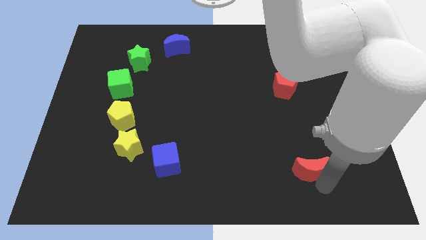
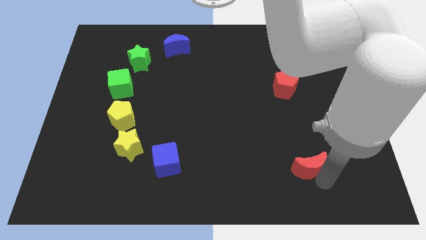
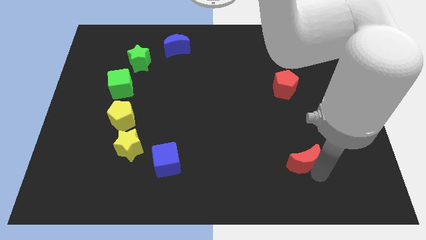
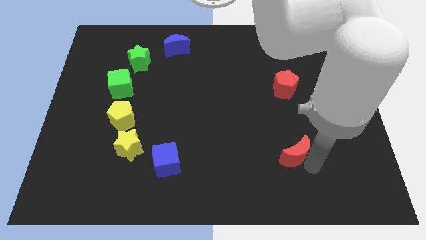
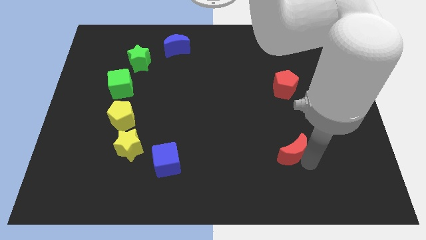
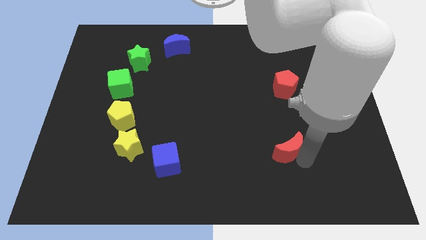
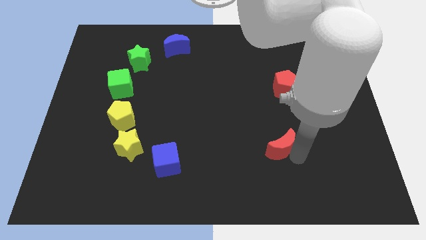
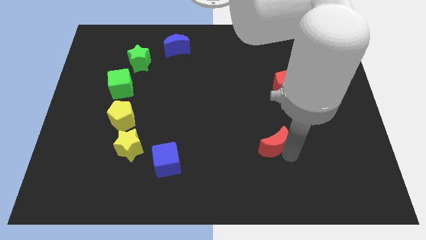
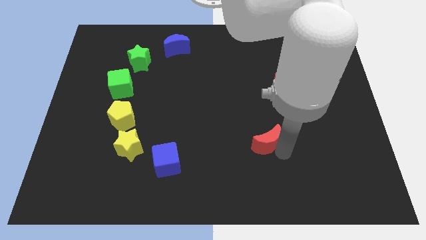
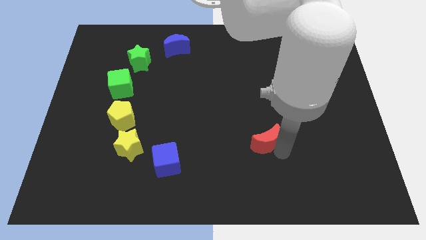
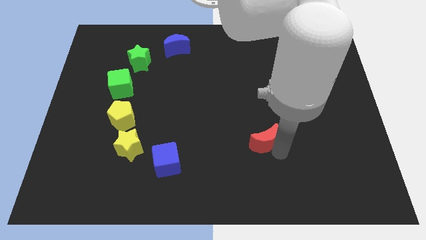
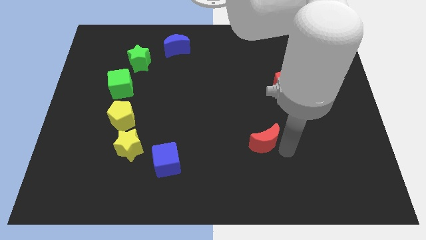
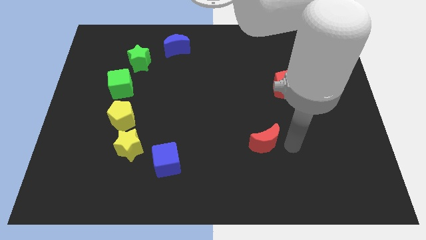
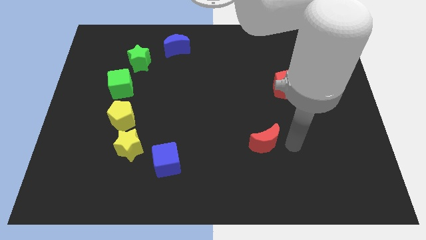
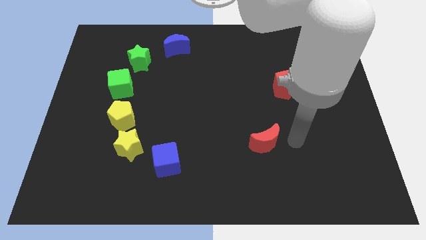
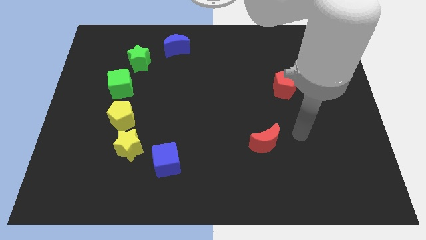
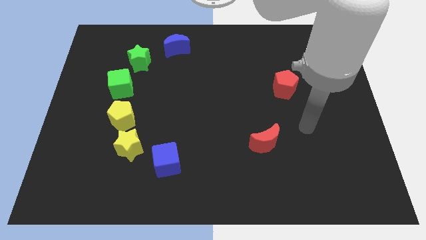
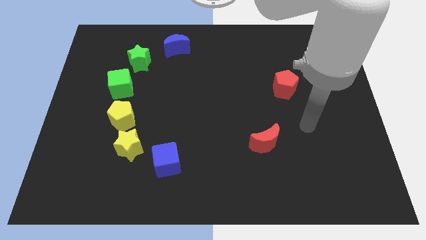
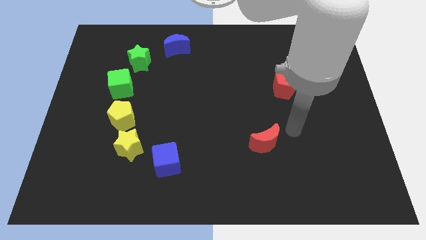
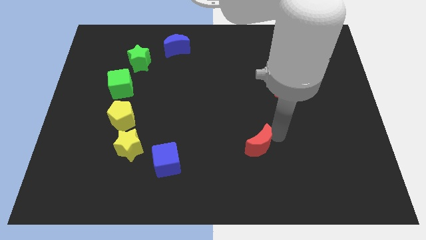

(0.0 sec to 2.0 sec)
move the red crescent towards the center of the board

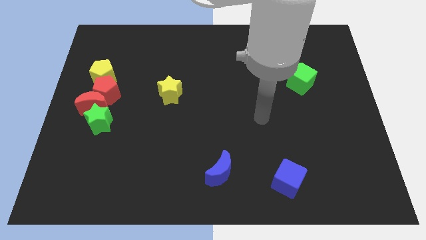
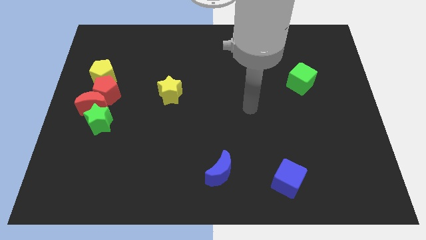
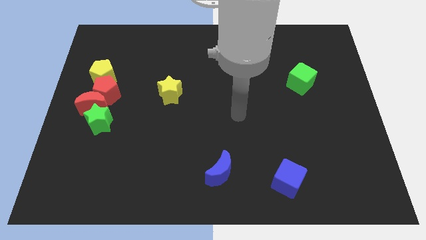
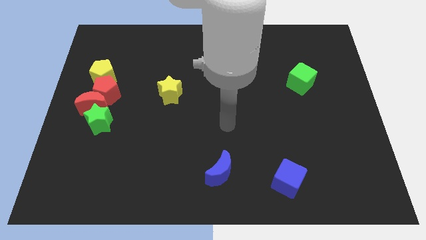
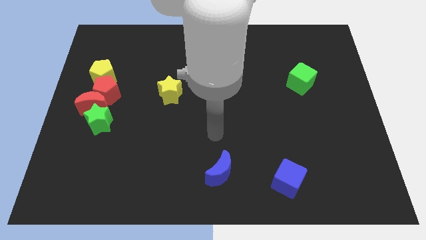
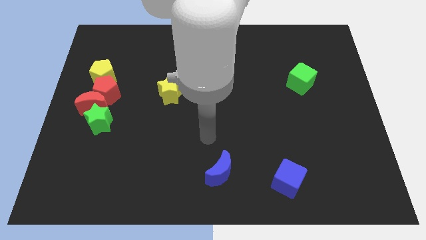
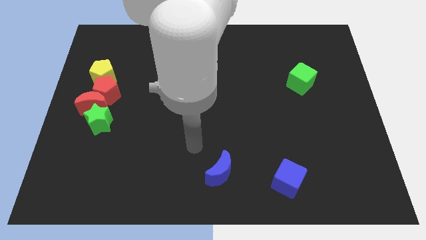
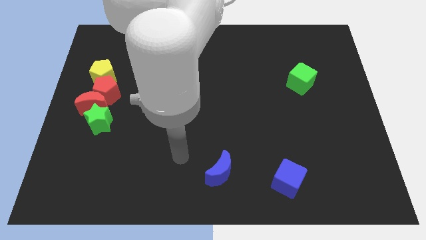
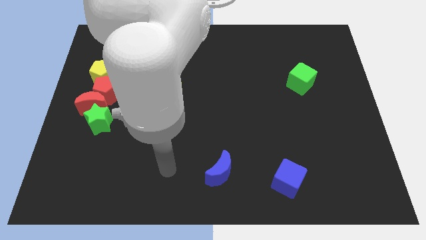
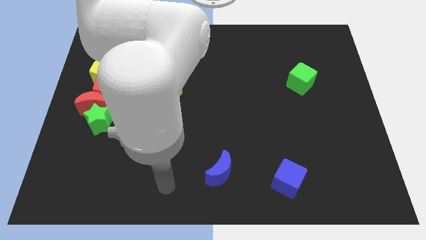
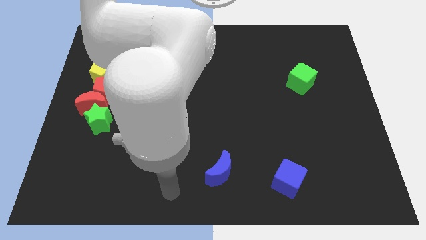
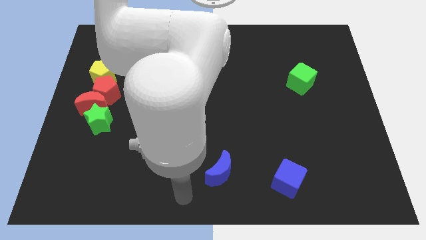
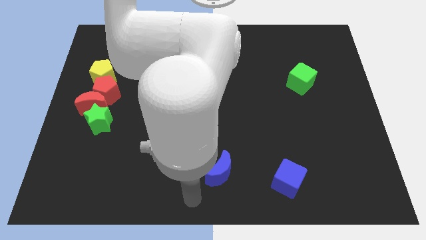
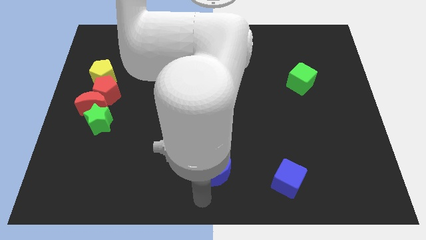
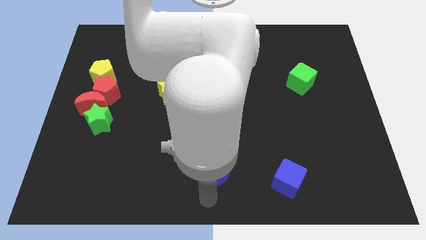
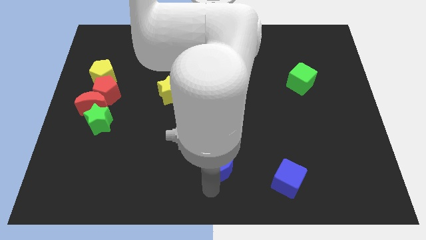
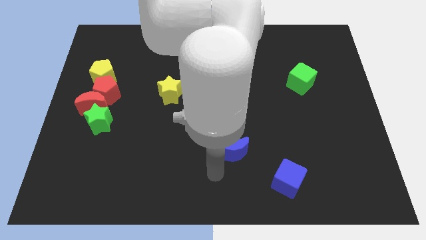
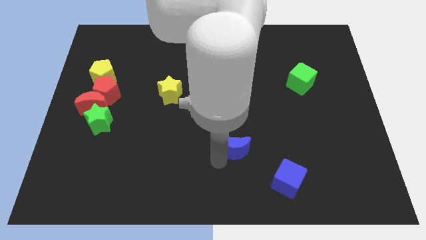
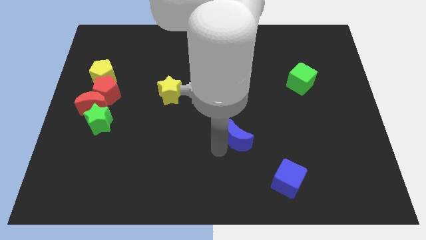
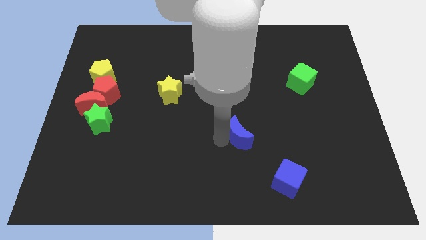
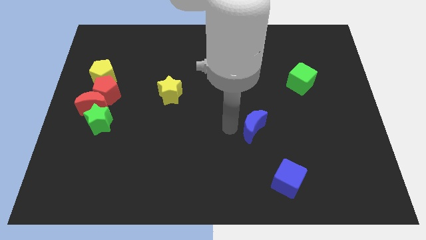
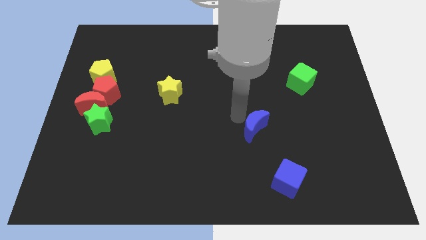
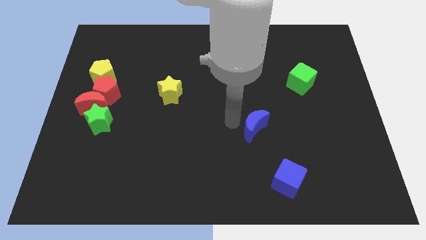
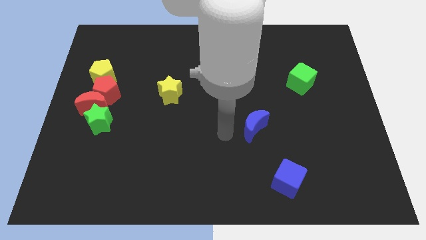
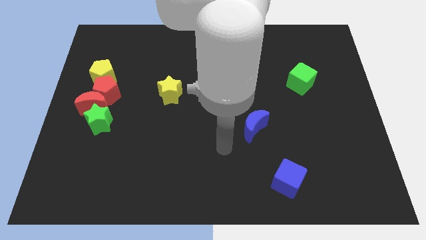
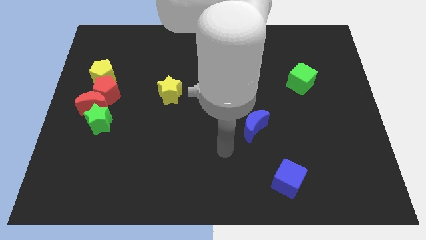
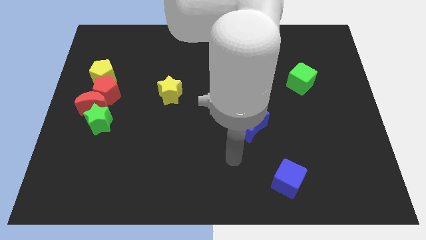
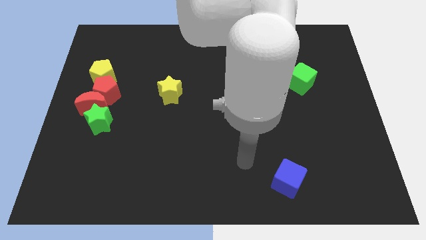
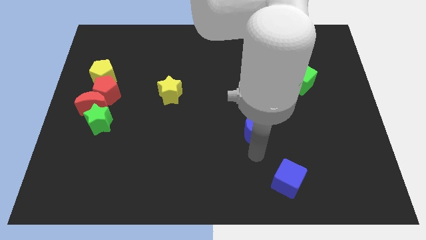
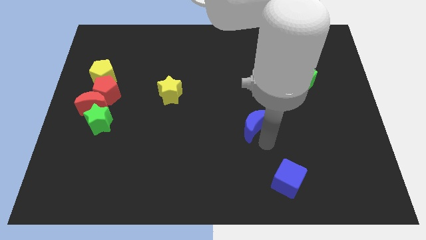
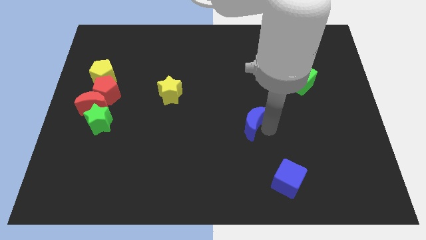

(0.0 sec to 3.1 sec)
push the blue moon left above the blue cube

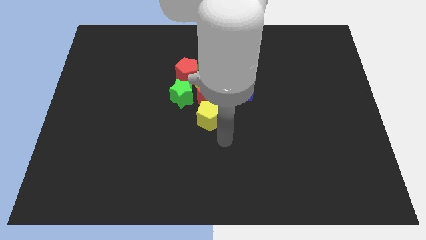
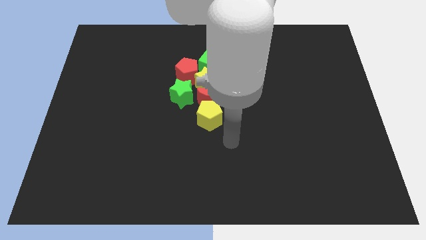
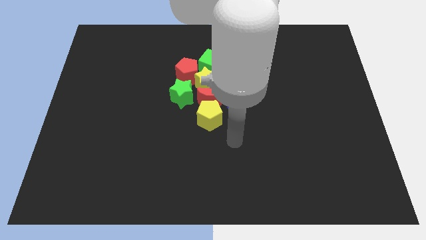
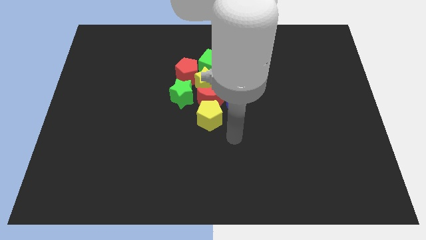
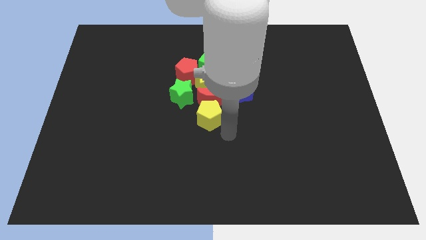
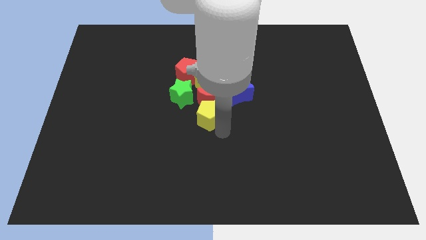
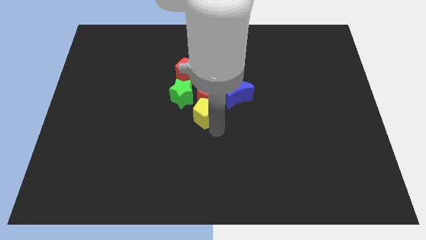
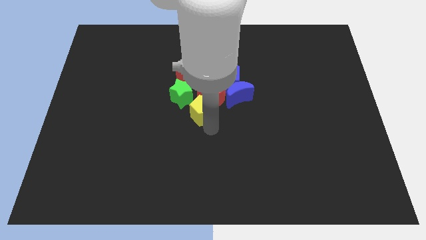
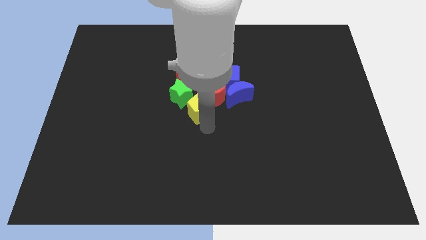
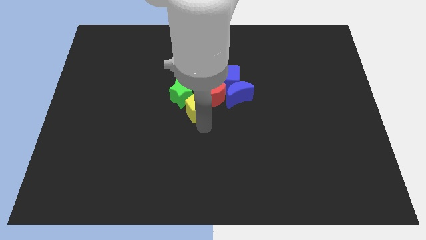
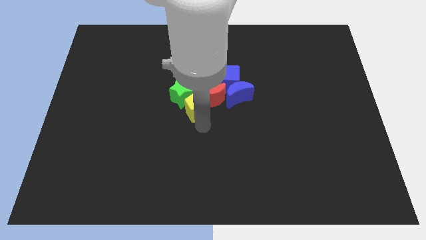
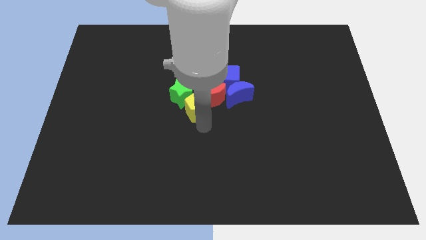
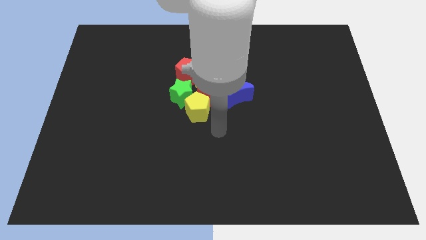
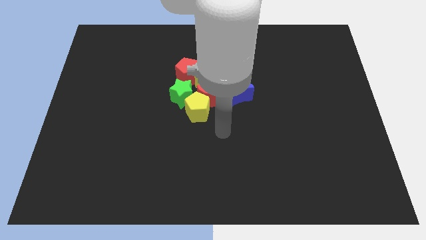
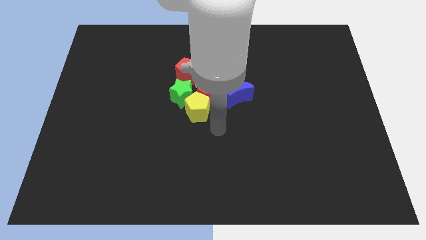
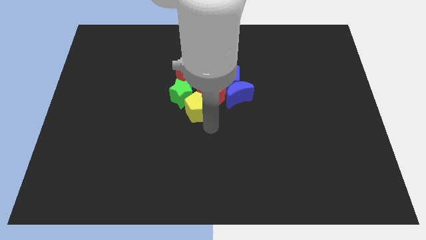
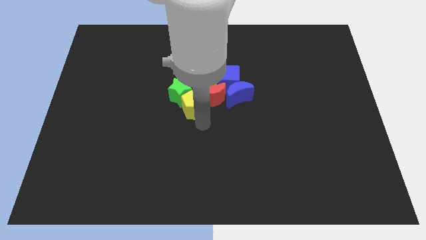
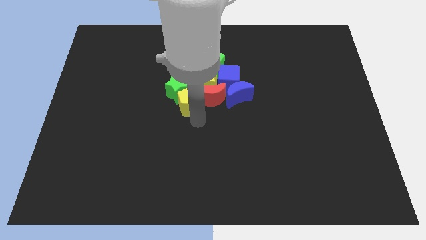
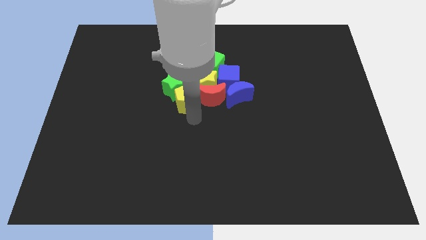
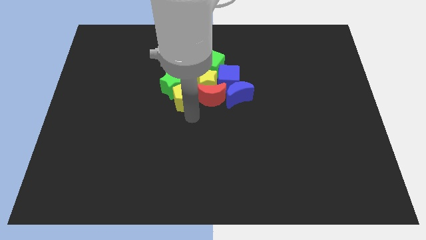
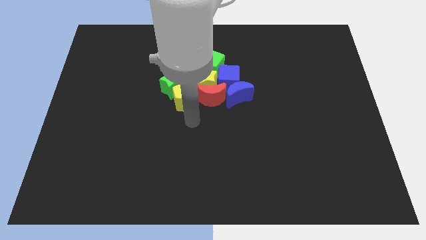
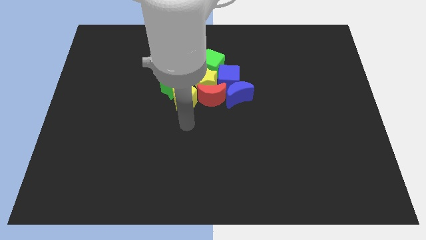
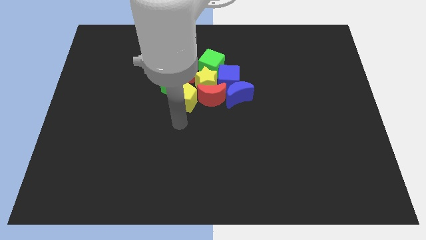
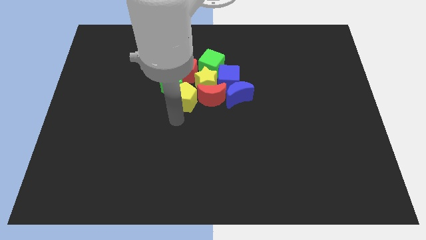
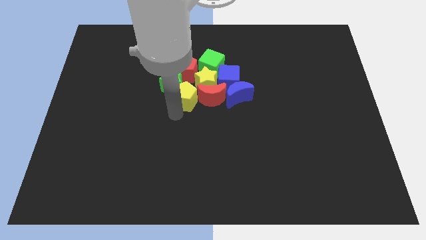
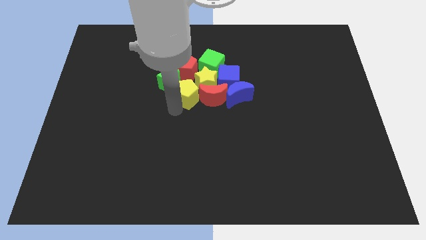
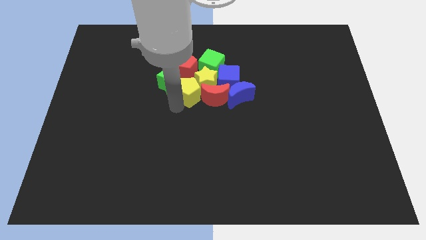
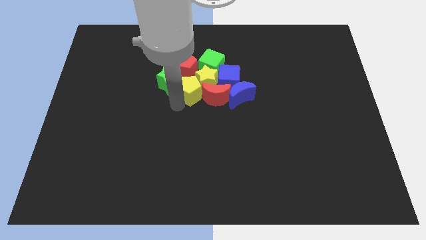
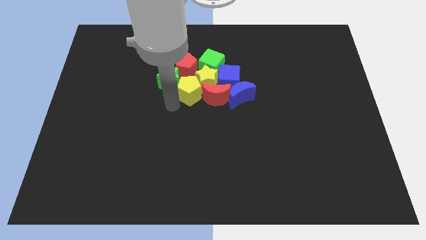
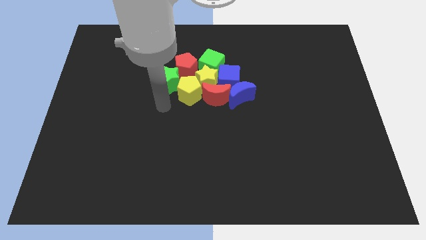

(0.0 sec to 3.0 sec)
push the yellow pentagon along with a green star close to the bottom of the red pentagon

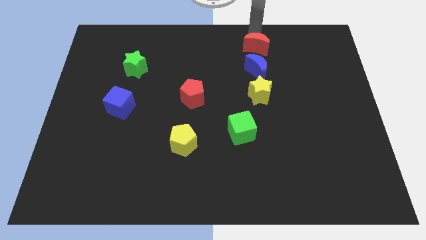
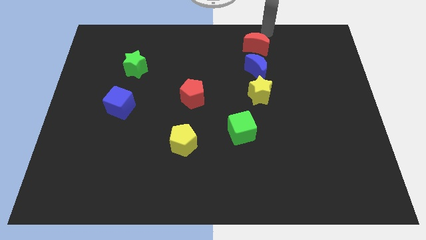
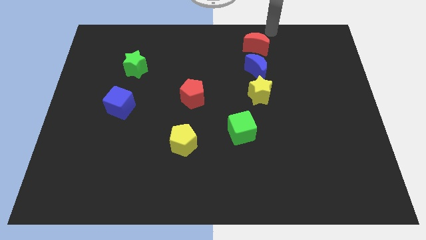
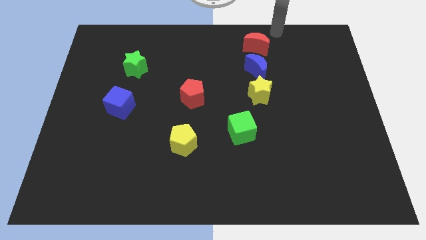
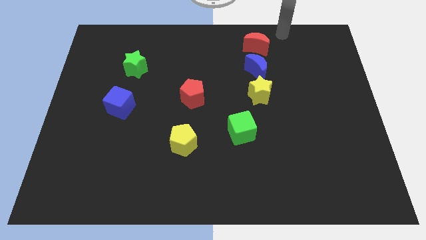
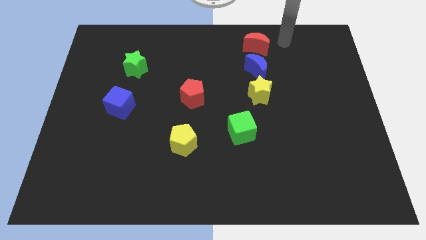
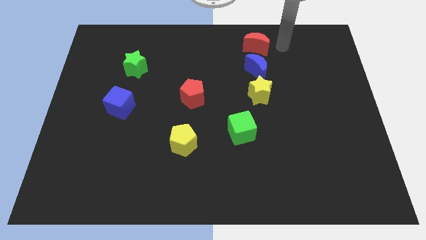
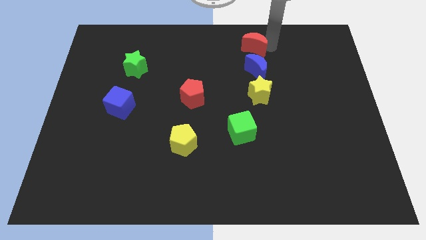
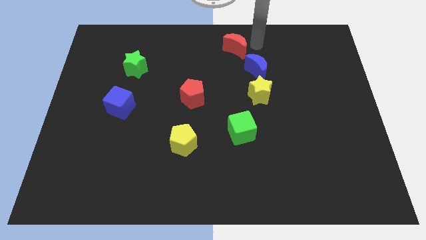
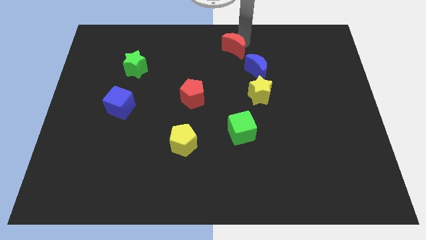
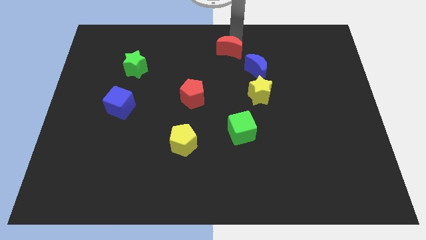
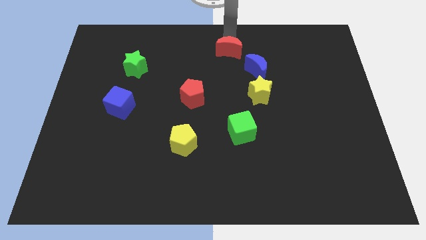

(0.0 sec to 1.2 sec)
slide red moon to top left of blue moon
